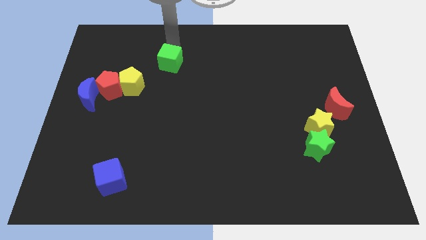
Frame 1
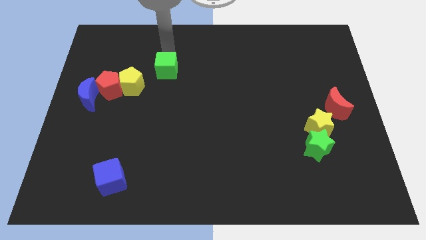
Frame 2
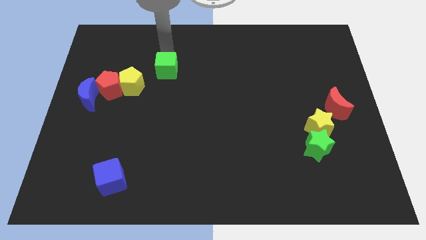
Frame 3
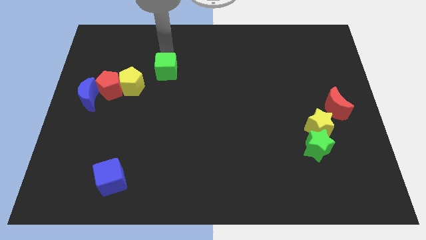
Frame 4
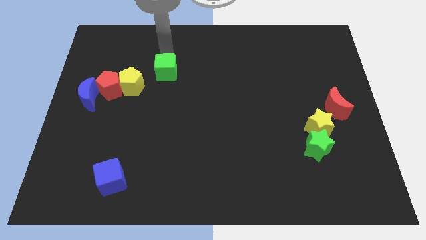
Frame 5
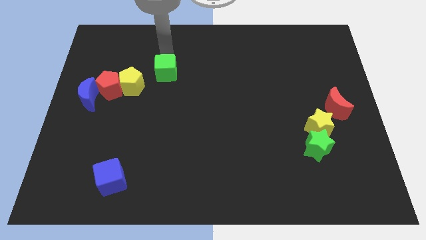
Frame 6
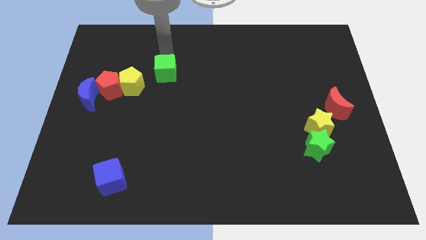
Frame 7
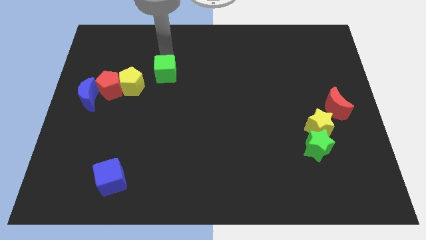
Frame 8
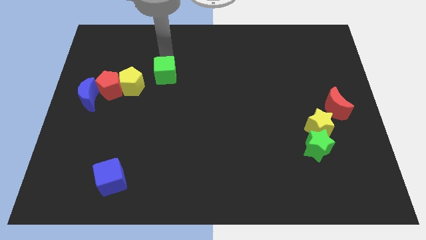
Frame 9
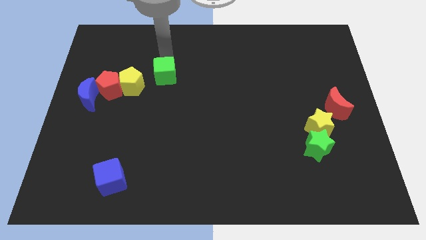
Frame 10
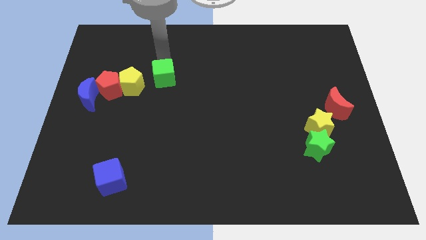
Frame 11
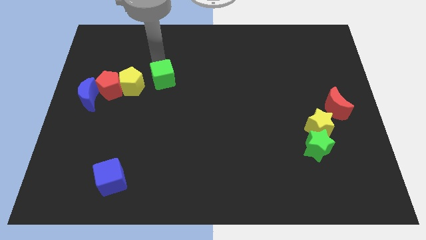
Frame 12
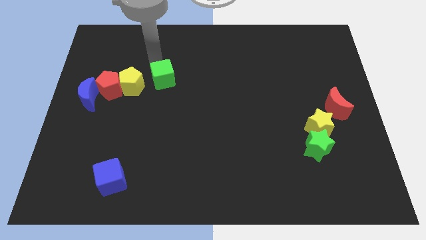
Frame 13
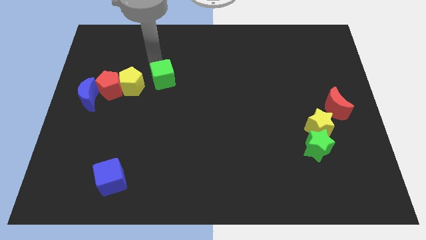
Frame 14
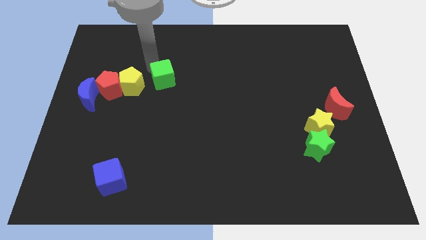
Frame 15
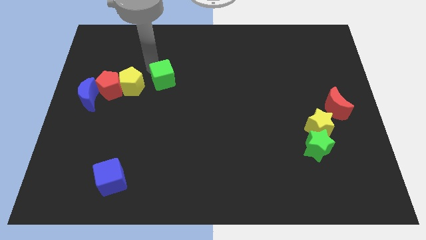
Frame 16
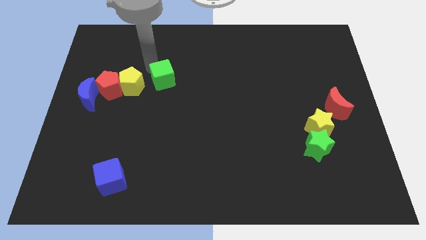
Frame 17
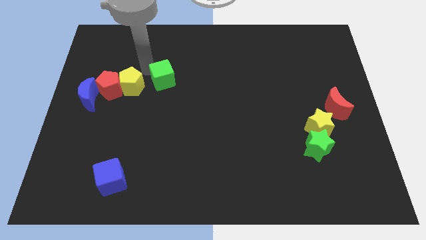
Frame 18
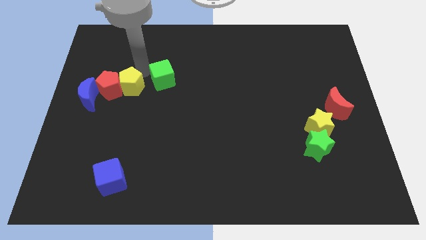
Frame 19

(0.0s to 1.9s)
slide the green cube to the right of the yellow pentagon

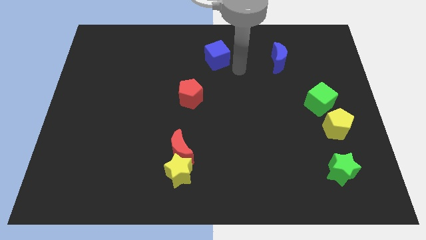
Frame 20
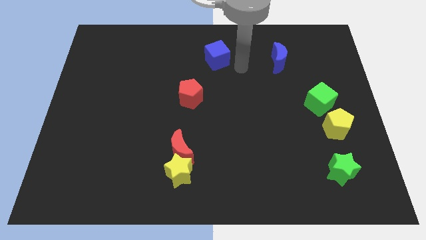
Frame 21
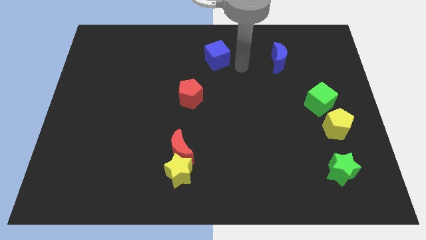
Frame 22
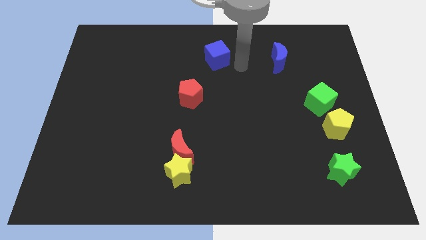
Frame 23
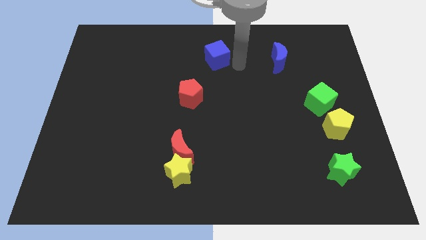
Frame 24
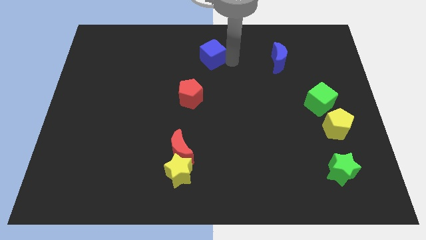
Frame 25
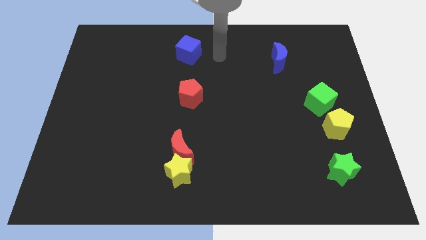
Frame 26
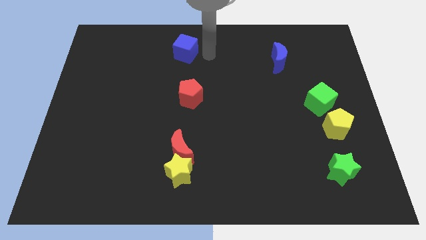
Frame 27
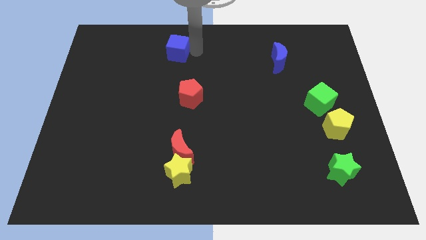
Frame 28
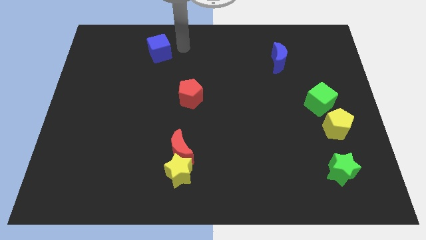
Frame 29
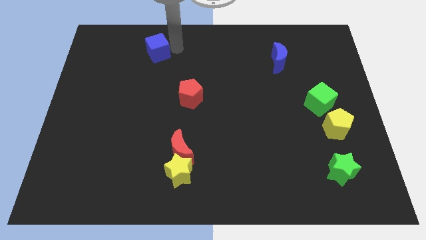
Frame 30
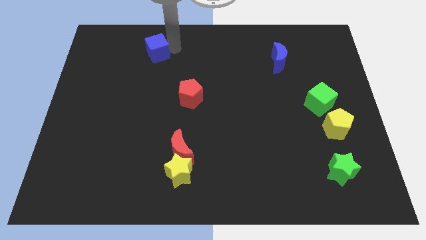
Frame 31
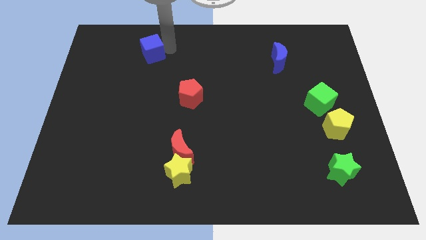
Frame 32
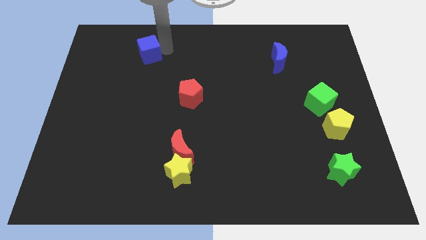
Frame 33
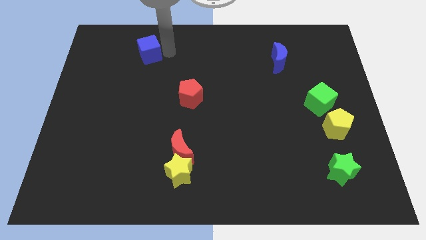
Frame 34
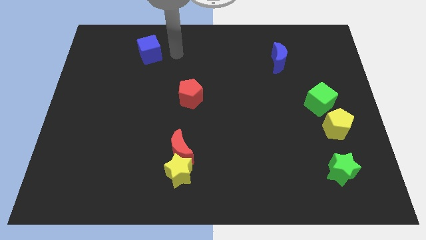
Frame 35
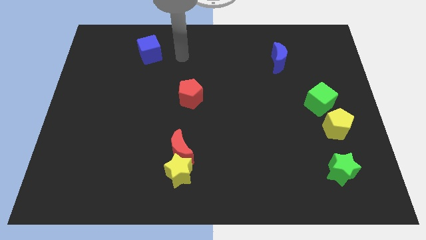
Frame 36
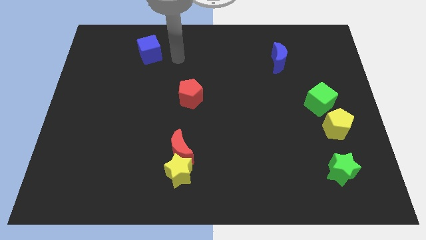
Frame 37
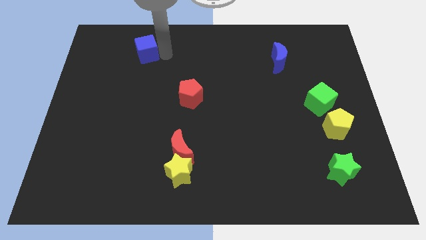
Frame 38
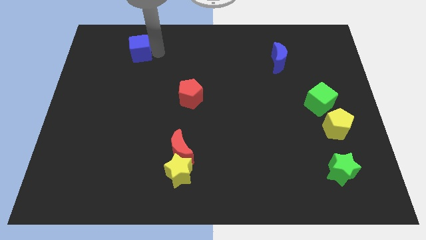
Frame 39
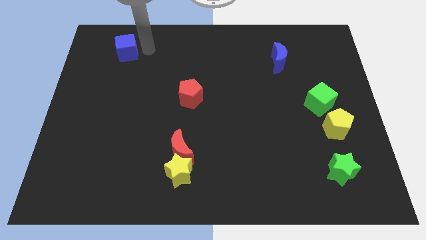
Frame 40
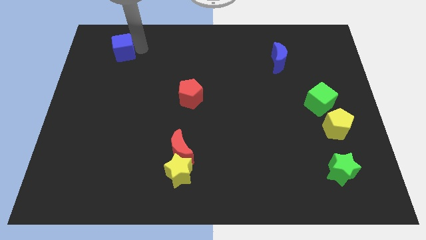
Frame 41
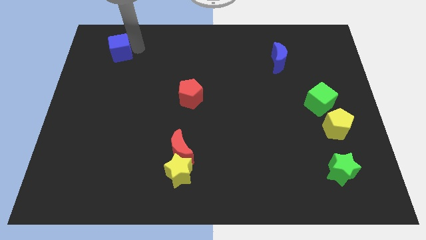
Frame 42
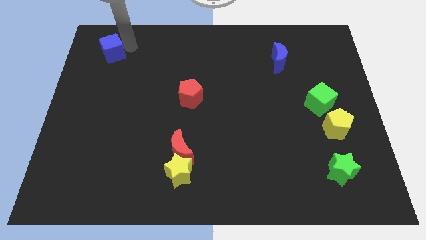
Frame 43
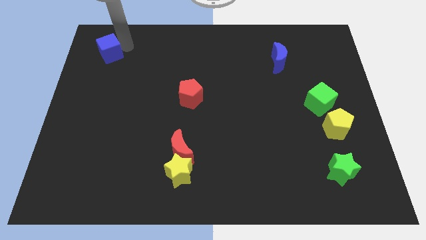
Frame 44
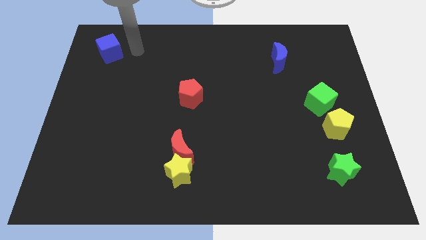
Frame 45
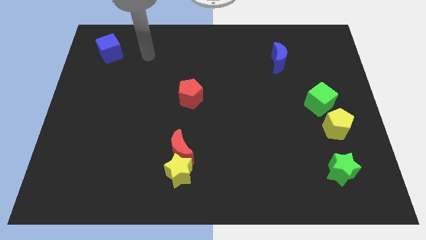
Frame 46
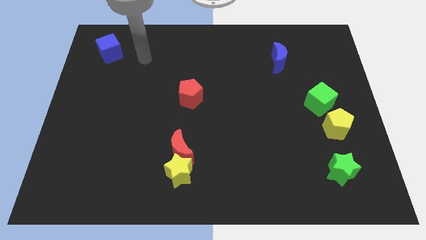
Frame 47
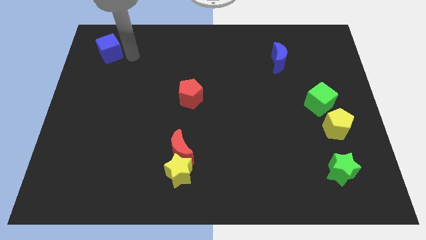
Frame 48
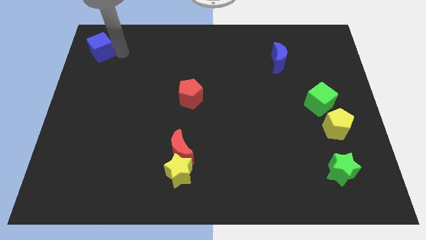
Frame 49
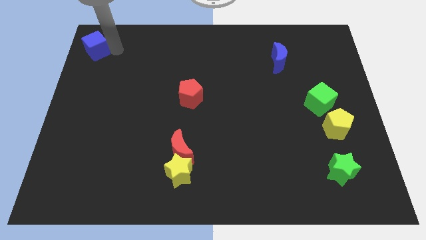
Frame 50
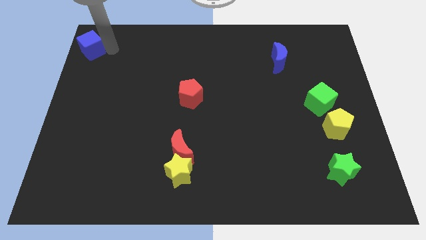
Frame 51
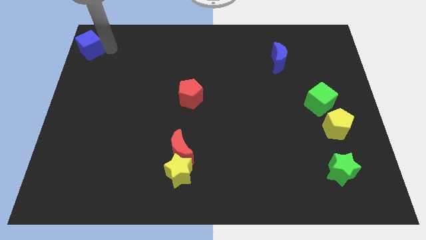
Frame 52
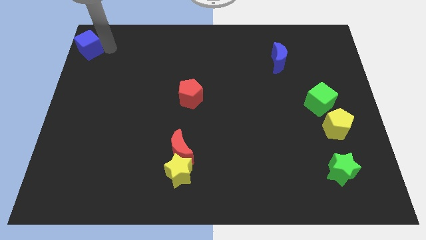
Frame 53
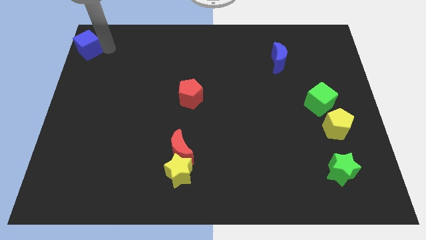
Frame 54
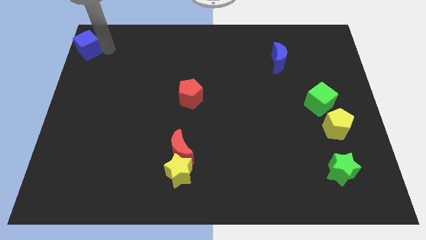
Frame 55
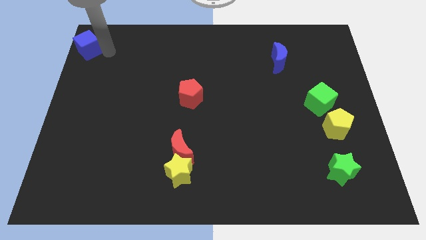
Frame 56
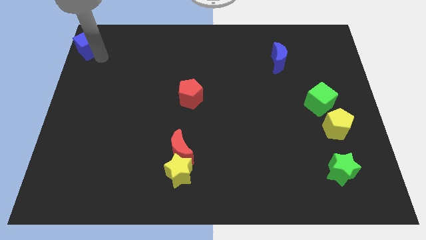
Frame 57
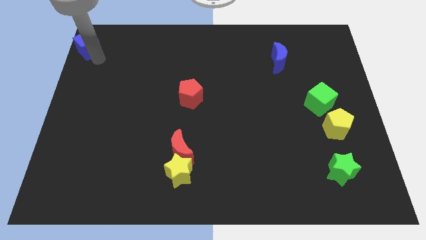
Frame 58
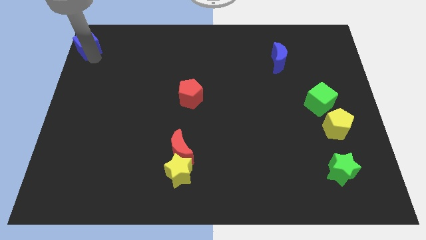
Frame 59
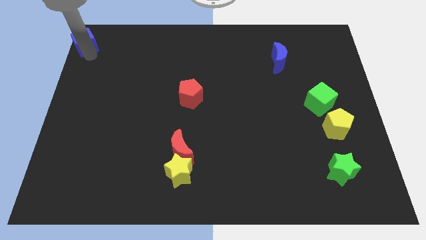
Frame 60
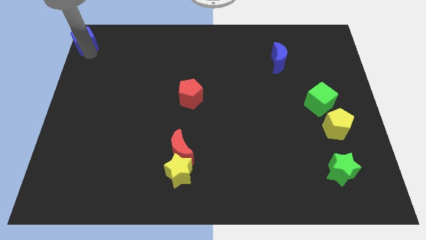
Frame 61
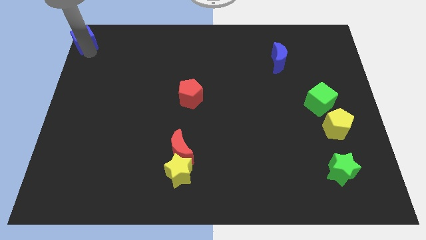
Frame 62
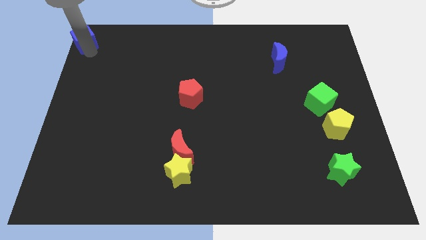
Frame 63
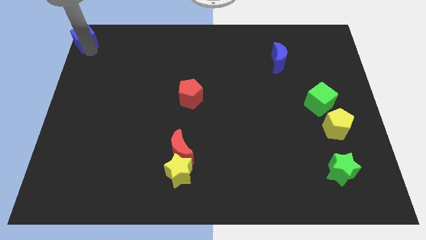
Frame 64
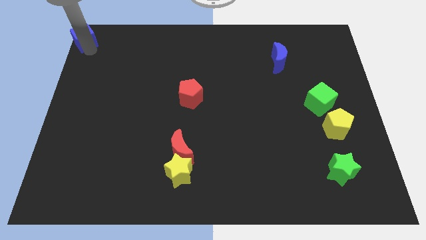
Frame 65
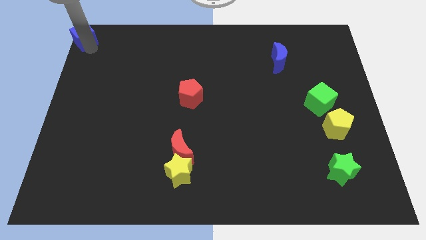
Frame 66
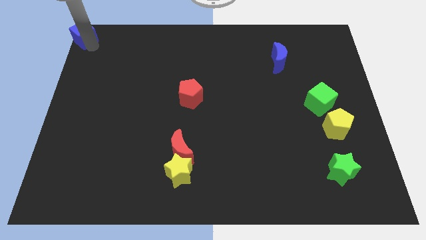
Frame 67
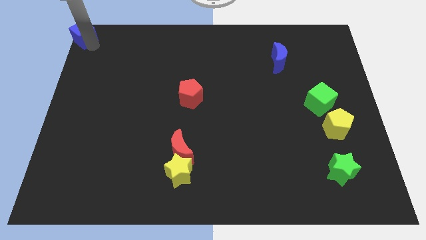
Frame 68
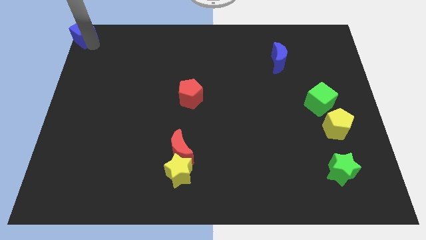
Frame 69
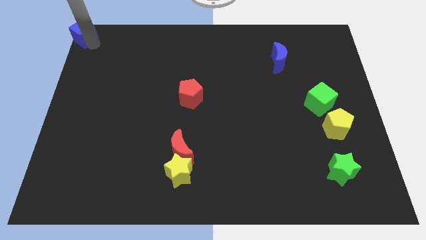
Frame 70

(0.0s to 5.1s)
place blue cube at the top left corner

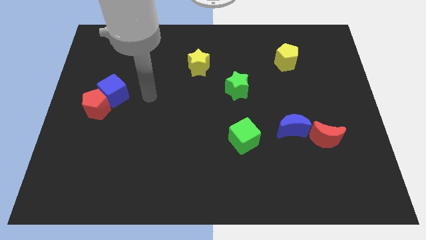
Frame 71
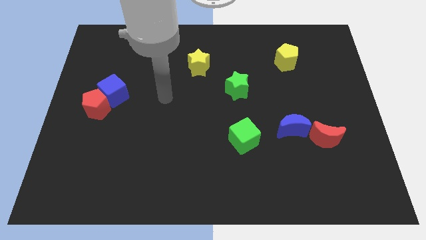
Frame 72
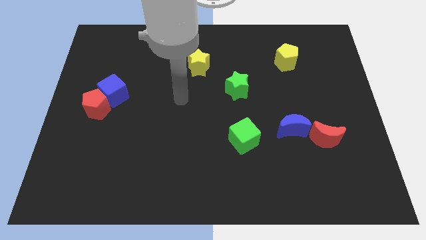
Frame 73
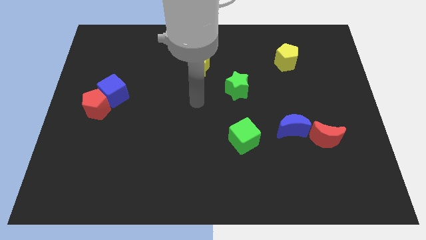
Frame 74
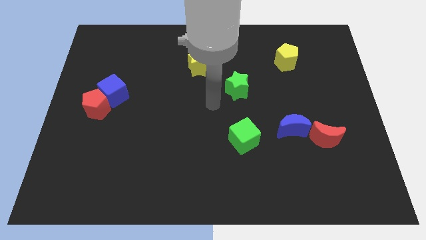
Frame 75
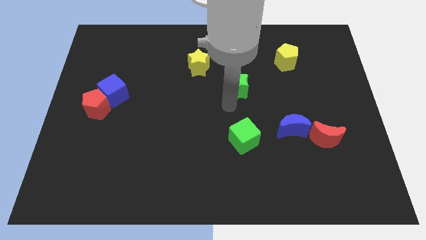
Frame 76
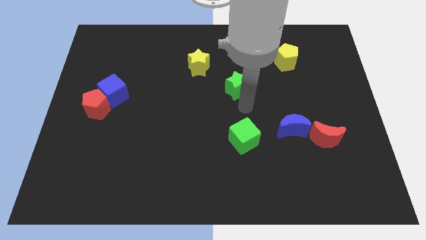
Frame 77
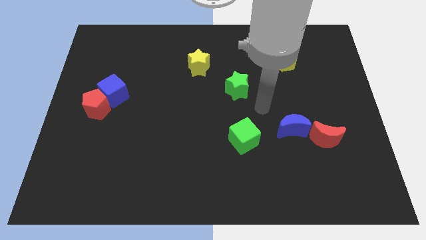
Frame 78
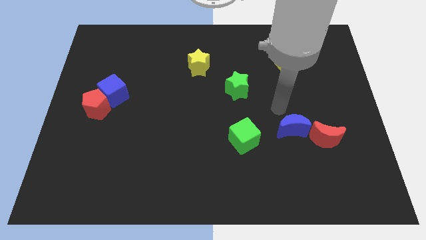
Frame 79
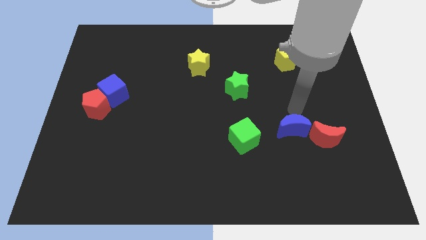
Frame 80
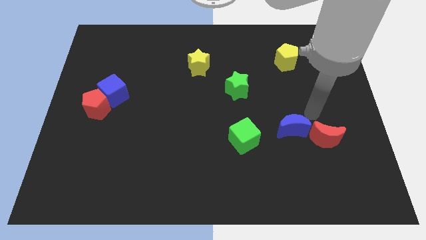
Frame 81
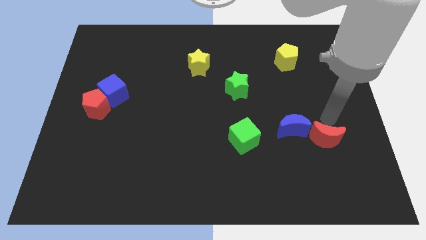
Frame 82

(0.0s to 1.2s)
move your arm to the top of the red crescent

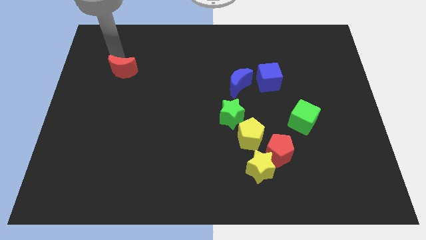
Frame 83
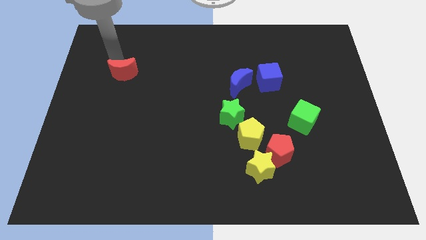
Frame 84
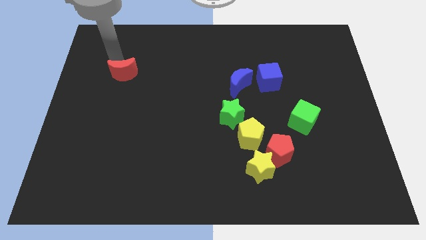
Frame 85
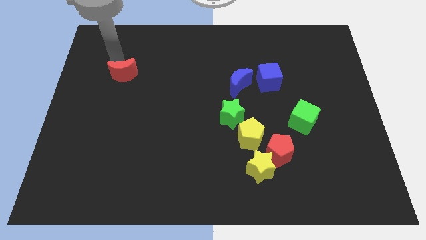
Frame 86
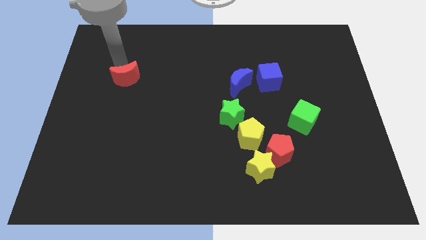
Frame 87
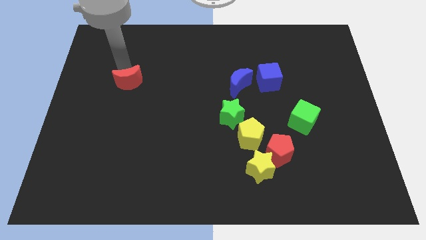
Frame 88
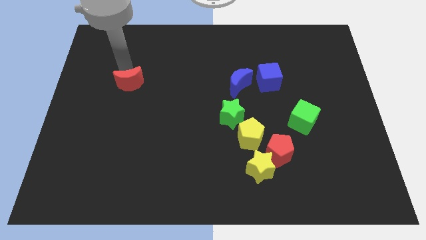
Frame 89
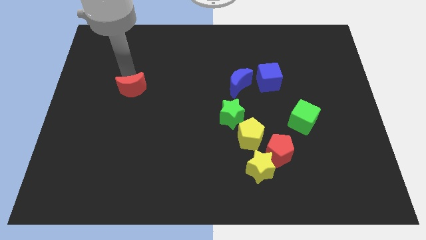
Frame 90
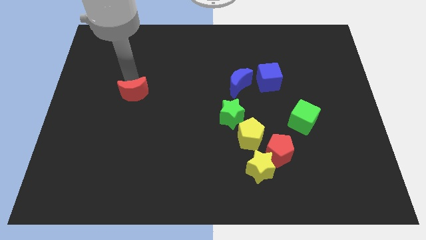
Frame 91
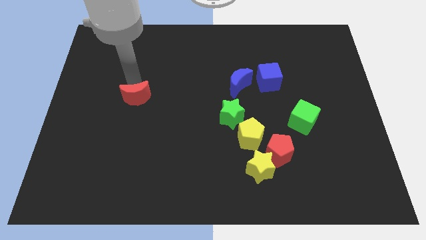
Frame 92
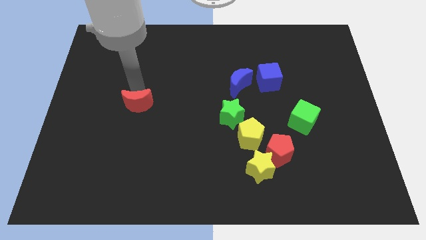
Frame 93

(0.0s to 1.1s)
push the red moon to the center left
